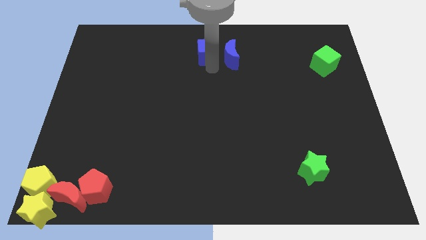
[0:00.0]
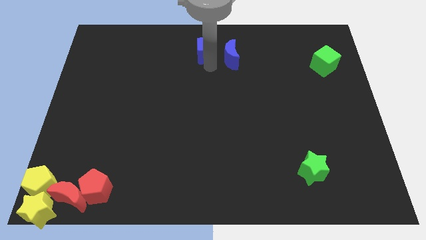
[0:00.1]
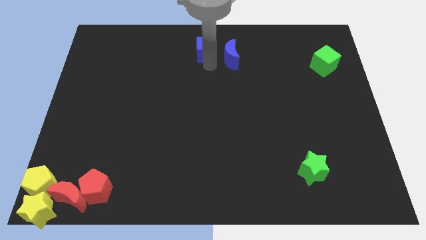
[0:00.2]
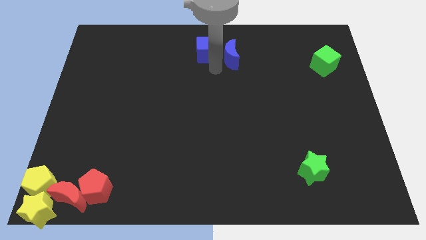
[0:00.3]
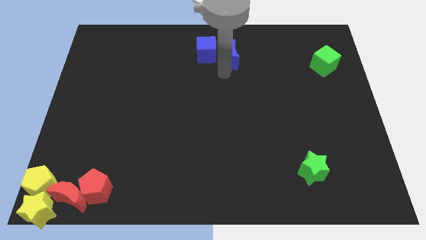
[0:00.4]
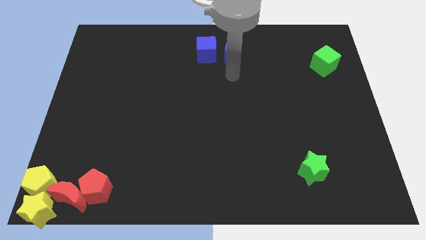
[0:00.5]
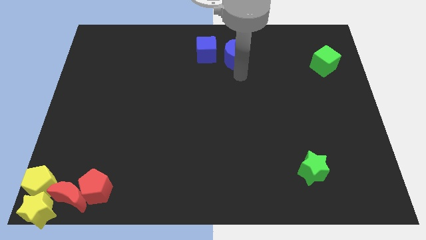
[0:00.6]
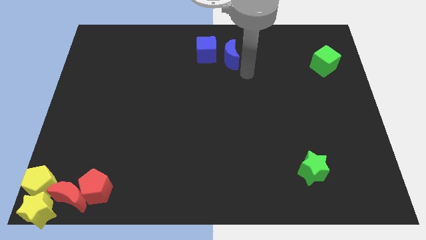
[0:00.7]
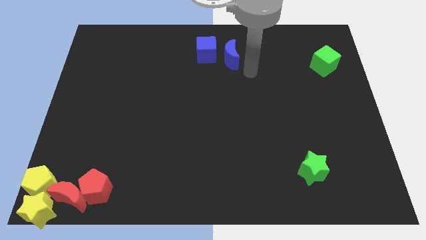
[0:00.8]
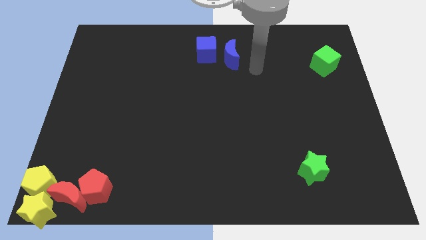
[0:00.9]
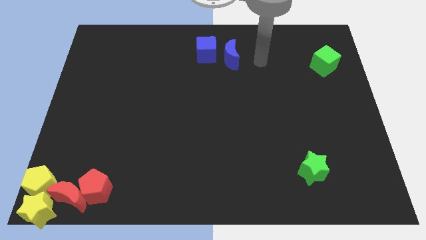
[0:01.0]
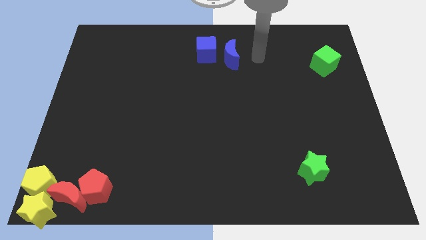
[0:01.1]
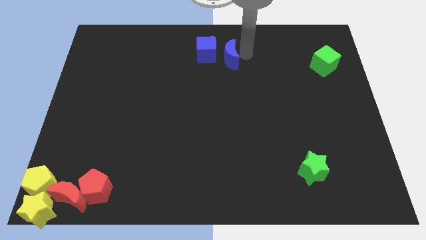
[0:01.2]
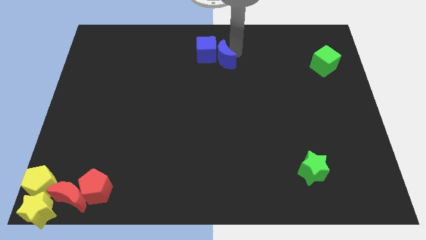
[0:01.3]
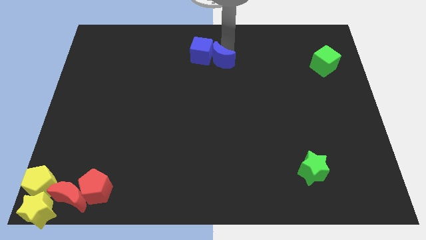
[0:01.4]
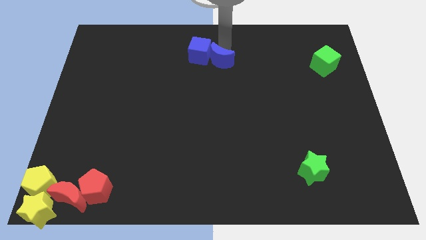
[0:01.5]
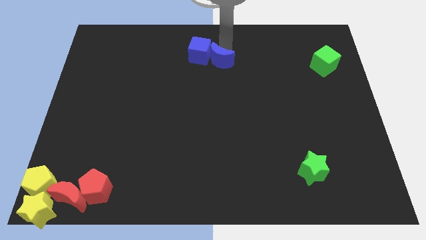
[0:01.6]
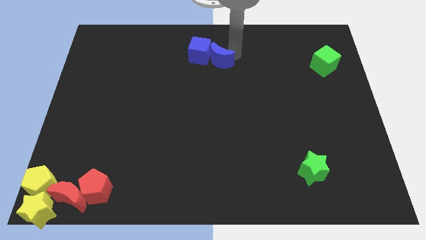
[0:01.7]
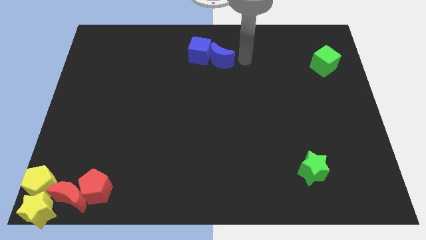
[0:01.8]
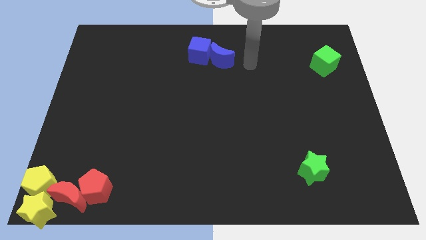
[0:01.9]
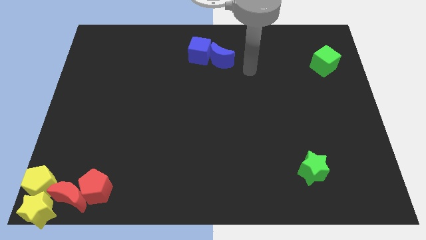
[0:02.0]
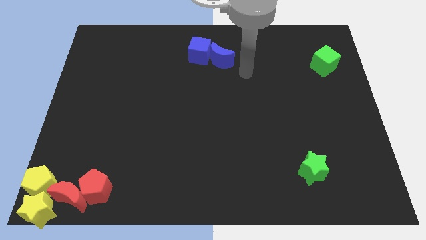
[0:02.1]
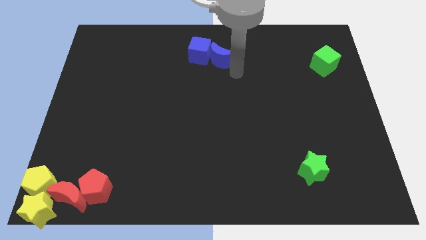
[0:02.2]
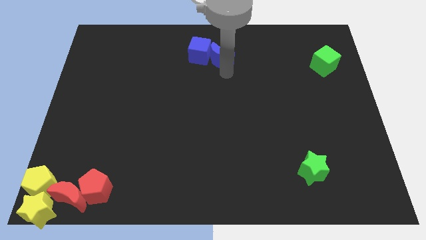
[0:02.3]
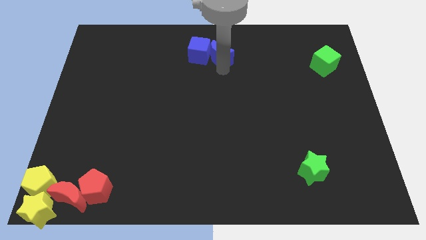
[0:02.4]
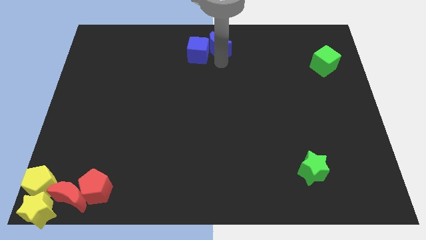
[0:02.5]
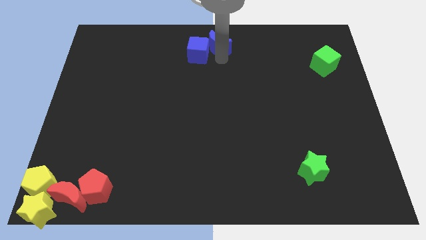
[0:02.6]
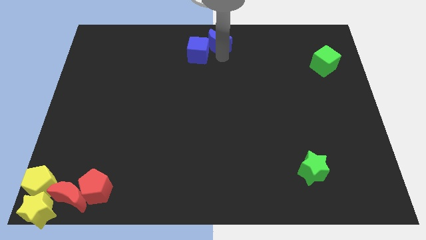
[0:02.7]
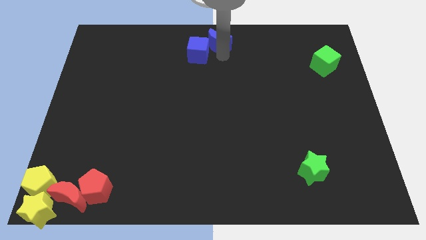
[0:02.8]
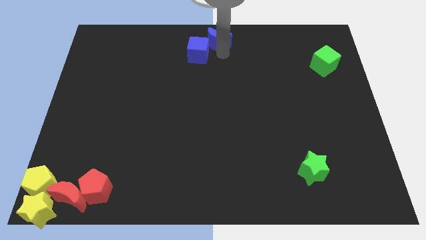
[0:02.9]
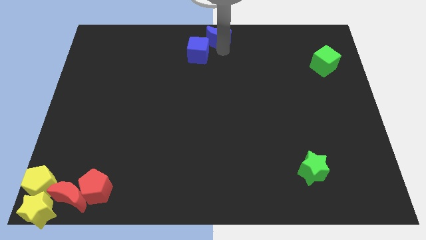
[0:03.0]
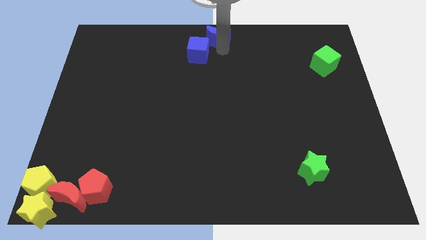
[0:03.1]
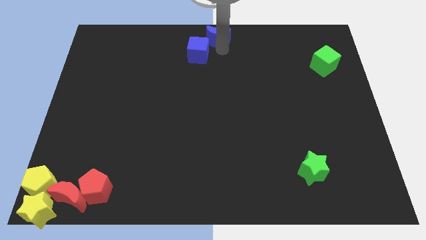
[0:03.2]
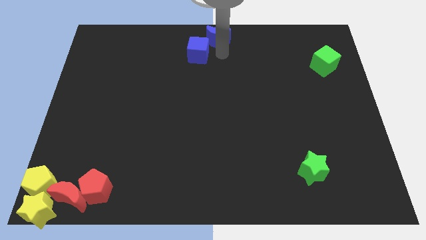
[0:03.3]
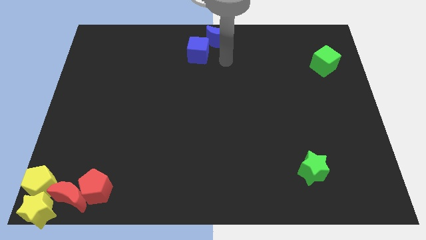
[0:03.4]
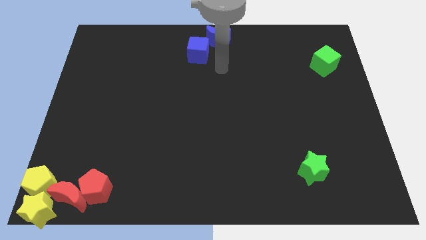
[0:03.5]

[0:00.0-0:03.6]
push blue moon upwards

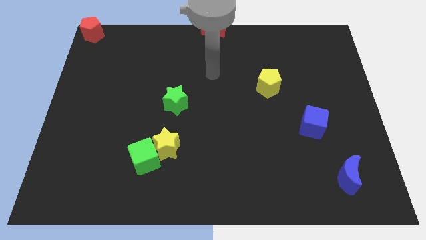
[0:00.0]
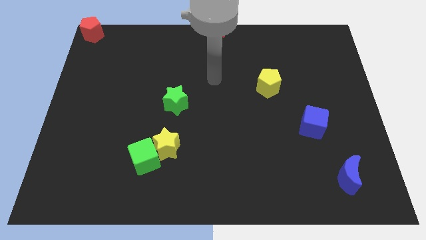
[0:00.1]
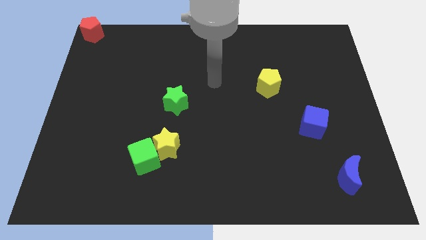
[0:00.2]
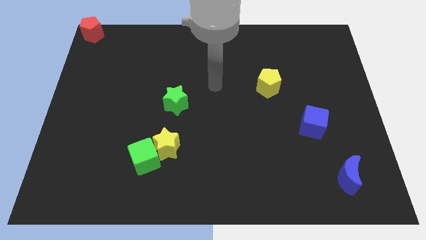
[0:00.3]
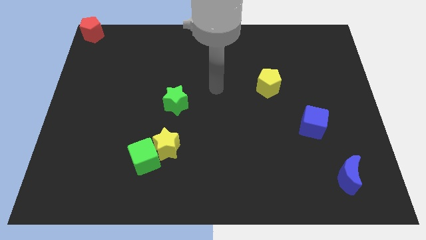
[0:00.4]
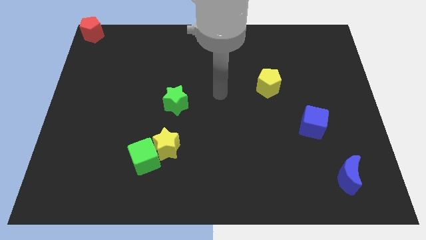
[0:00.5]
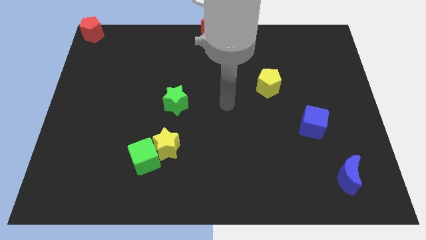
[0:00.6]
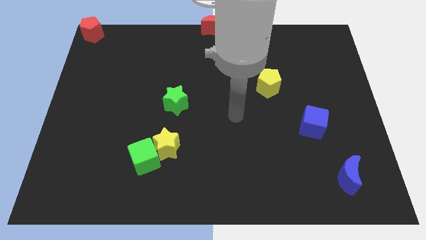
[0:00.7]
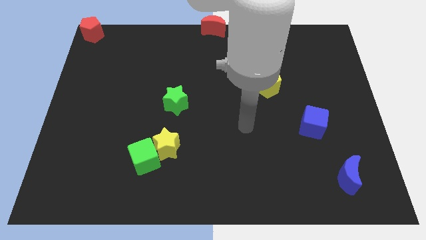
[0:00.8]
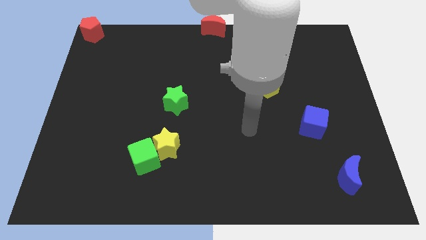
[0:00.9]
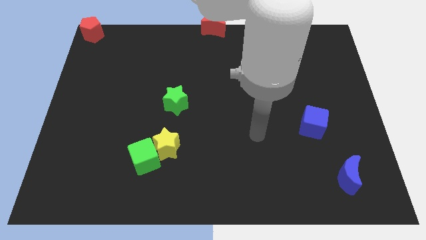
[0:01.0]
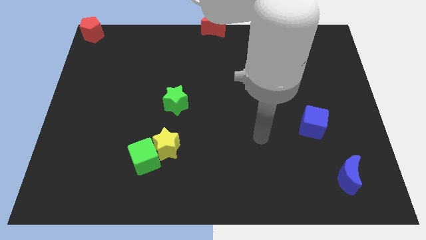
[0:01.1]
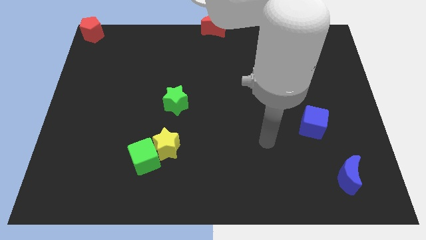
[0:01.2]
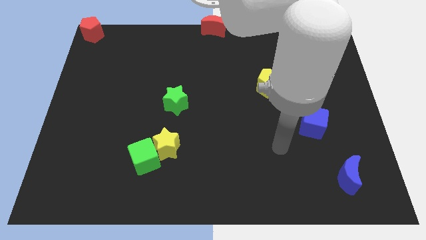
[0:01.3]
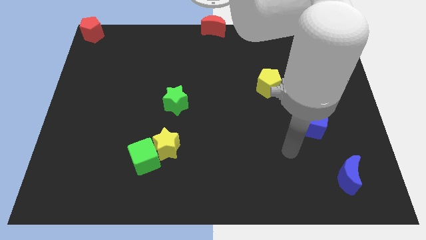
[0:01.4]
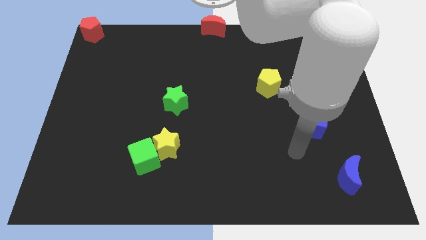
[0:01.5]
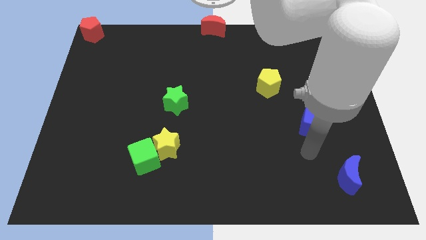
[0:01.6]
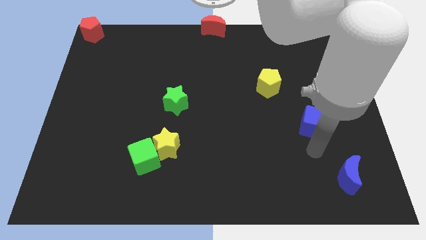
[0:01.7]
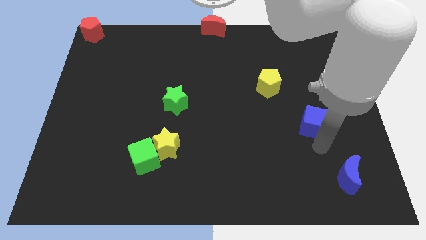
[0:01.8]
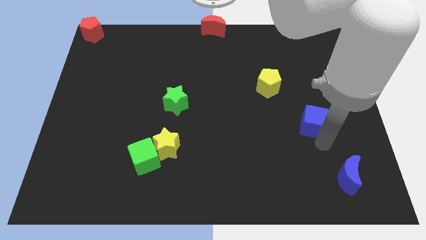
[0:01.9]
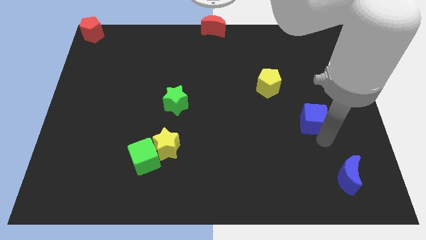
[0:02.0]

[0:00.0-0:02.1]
place your arm to the bottom of blue cube

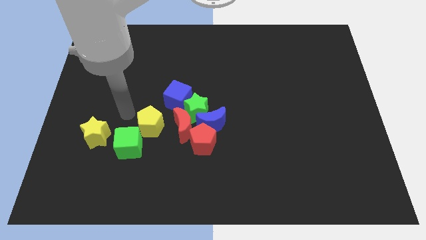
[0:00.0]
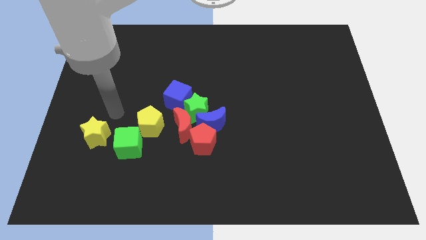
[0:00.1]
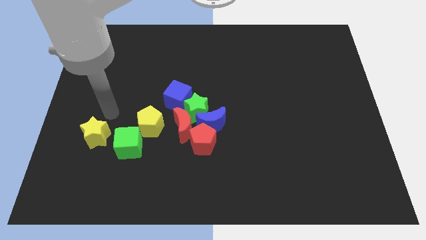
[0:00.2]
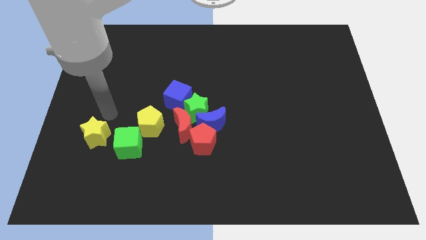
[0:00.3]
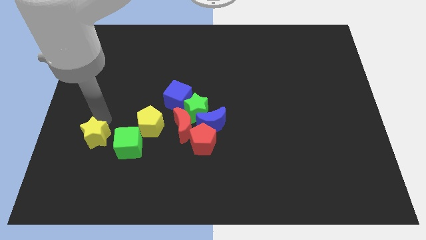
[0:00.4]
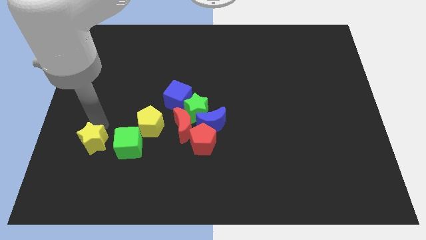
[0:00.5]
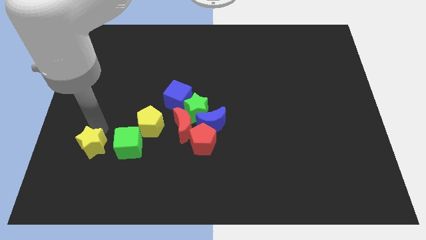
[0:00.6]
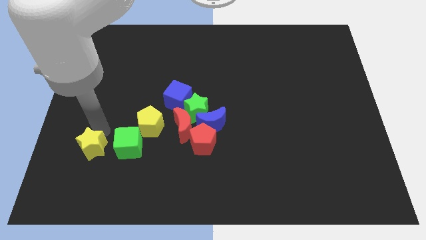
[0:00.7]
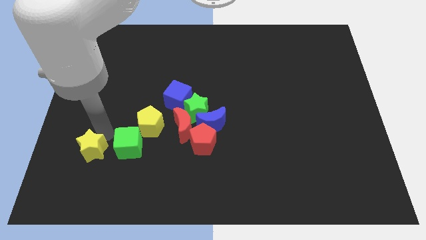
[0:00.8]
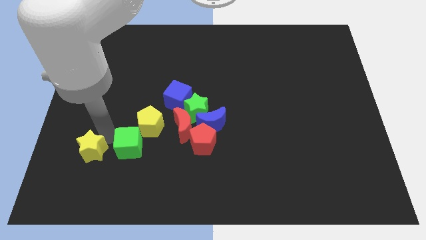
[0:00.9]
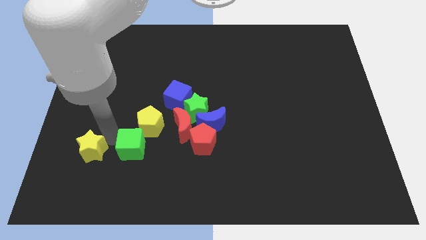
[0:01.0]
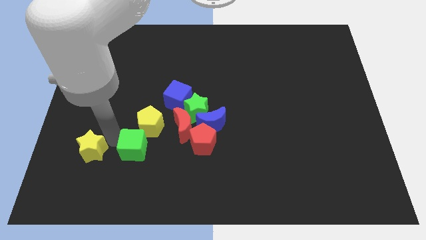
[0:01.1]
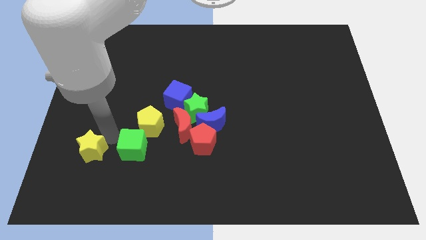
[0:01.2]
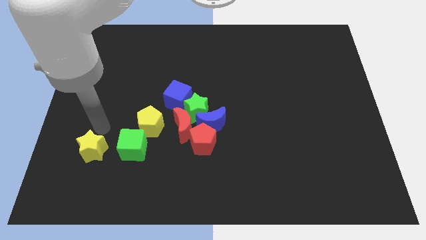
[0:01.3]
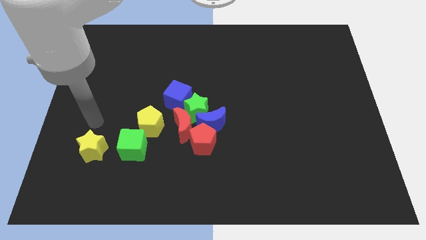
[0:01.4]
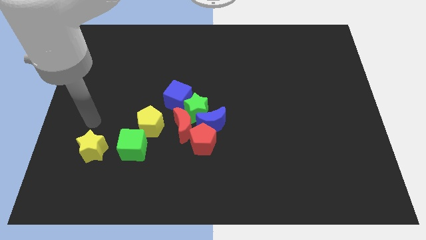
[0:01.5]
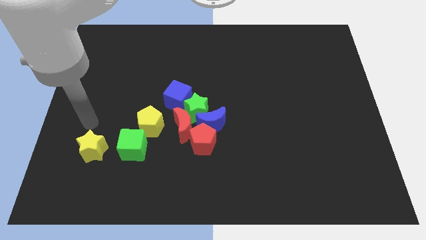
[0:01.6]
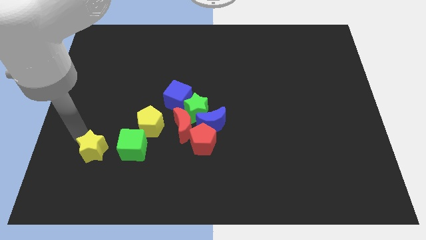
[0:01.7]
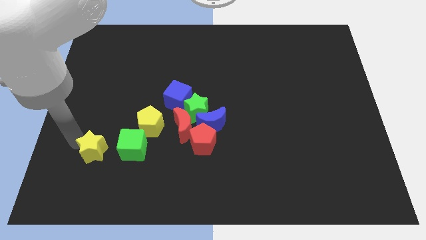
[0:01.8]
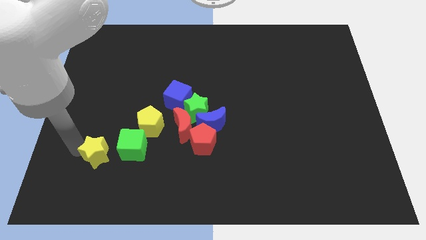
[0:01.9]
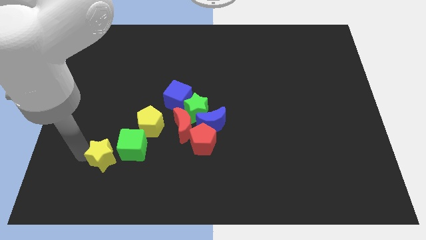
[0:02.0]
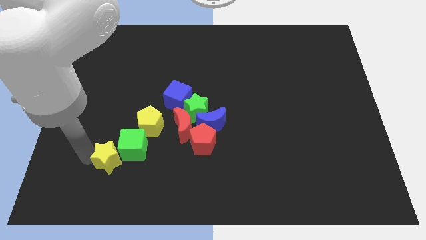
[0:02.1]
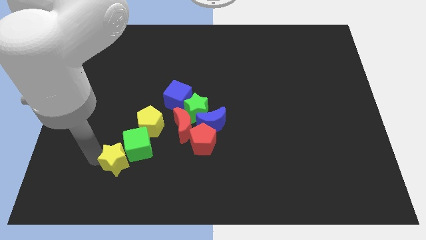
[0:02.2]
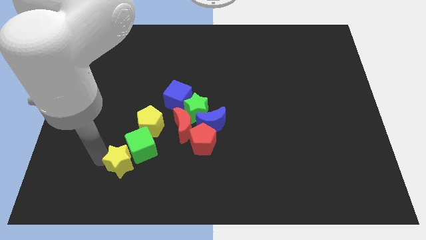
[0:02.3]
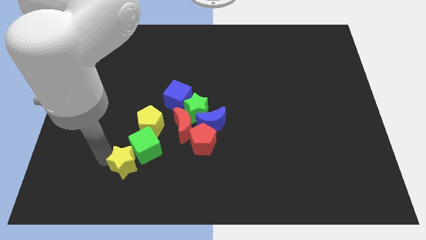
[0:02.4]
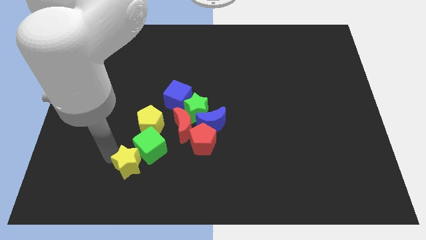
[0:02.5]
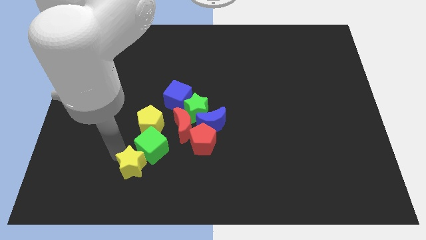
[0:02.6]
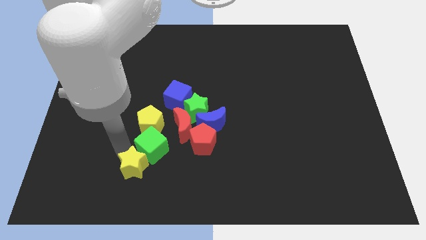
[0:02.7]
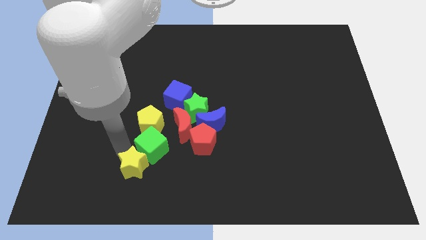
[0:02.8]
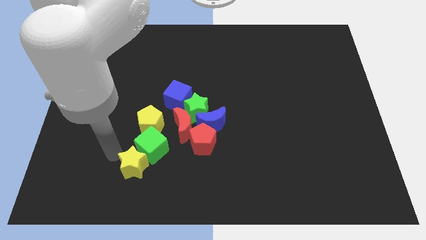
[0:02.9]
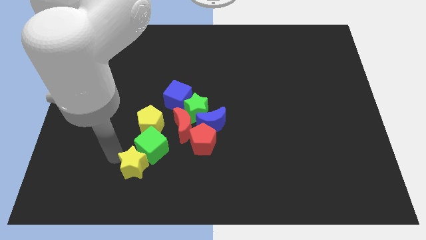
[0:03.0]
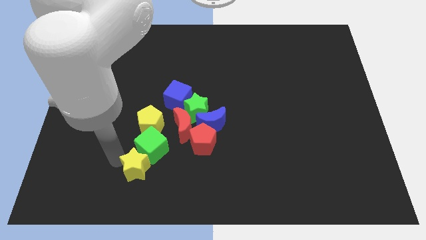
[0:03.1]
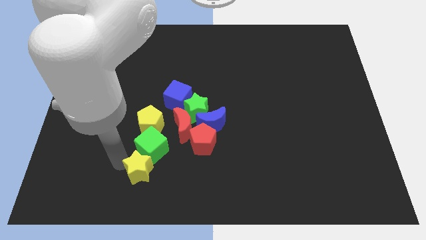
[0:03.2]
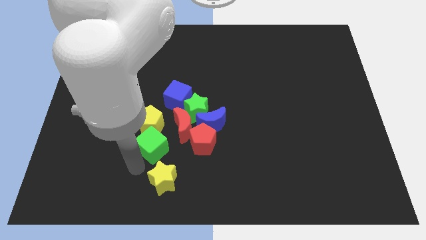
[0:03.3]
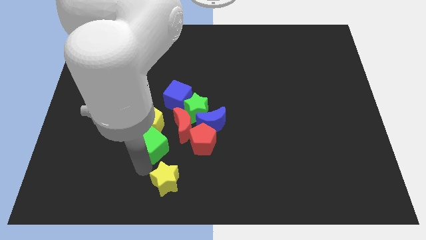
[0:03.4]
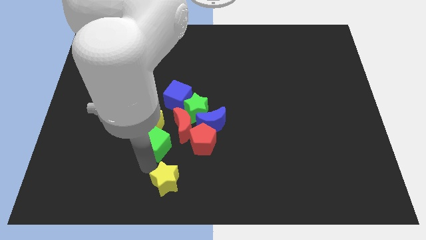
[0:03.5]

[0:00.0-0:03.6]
move the green cube and yellow star diagonally on the bottom right side of the yellow pentagon
